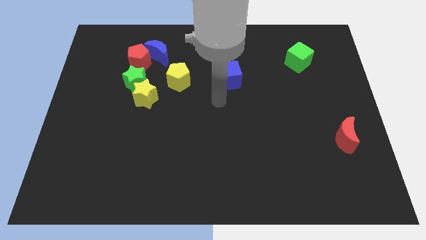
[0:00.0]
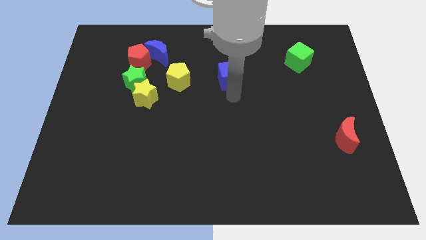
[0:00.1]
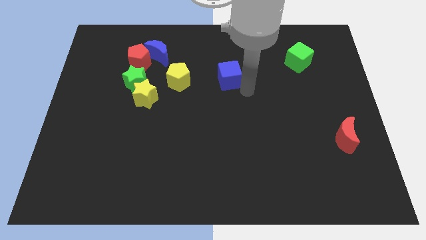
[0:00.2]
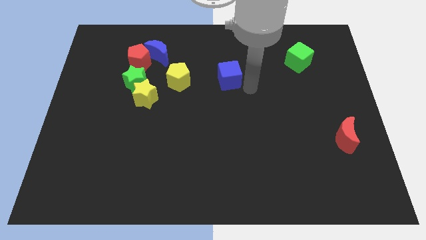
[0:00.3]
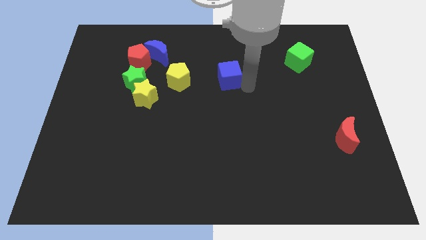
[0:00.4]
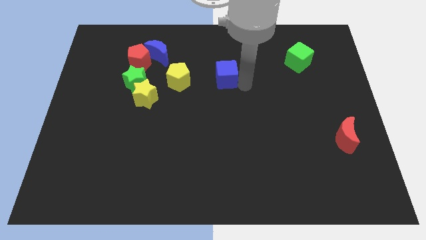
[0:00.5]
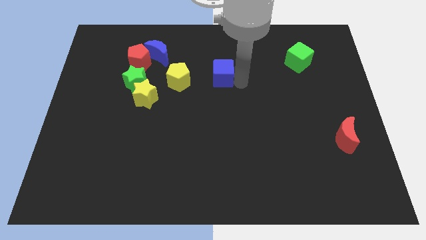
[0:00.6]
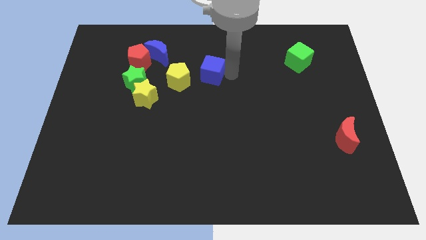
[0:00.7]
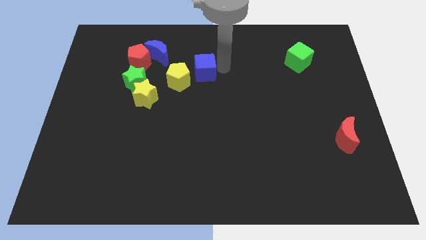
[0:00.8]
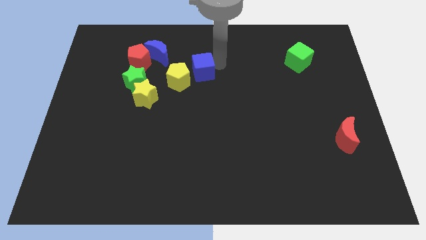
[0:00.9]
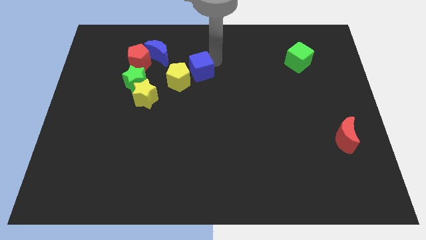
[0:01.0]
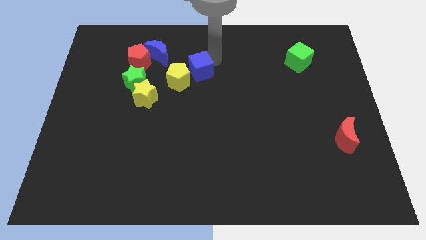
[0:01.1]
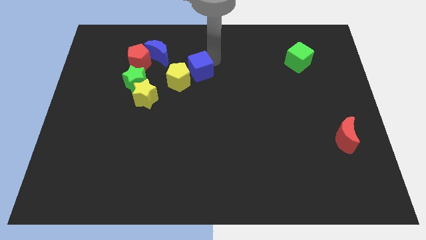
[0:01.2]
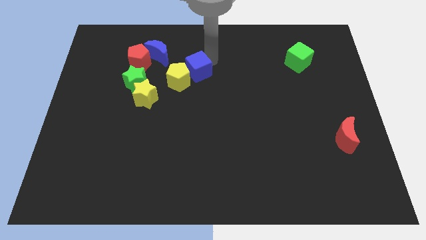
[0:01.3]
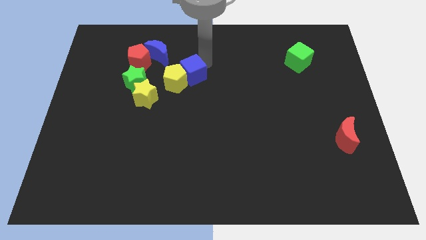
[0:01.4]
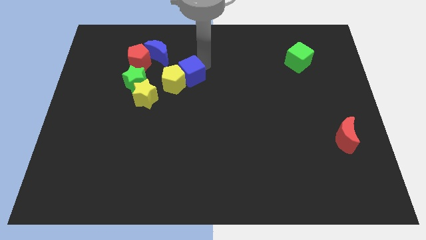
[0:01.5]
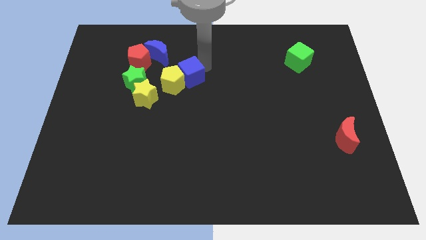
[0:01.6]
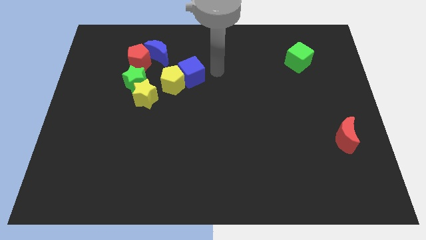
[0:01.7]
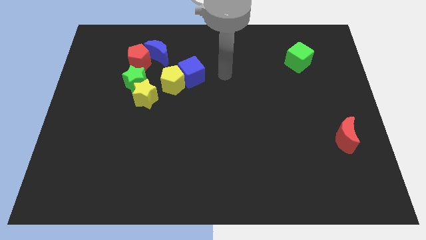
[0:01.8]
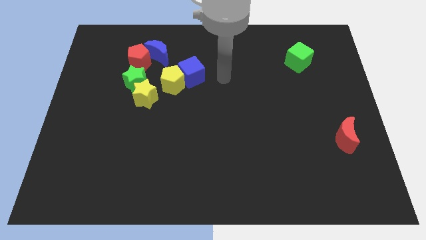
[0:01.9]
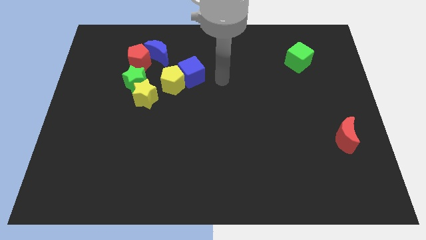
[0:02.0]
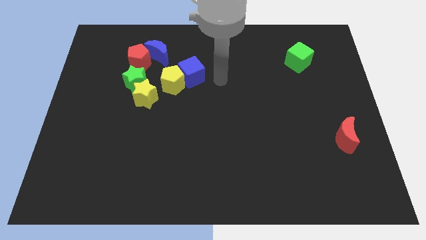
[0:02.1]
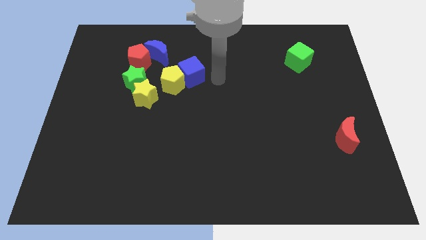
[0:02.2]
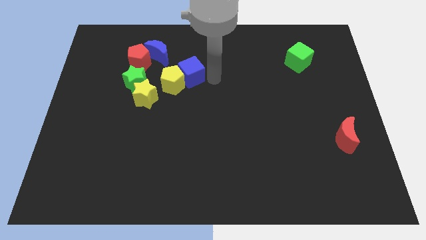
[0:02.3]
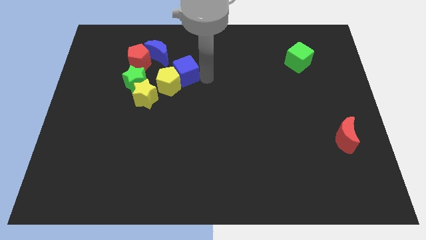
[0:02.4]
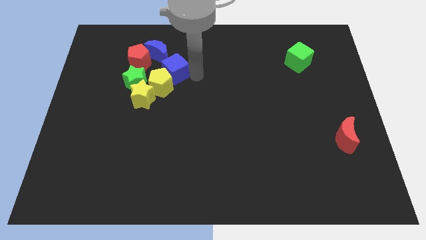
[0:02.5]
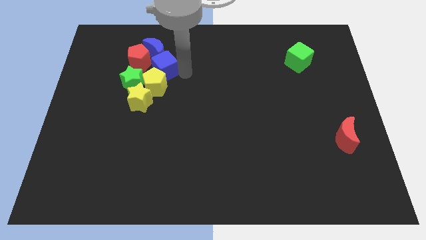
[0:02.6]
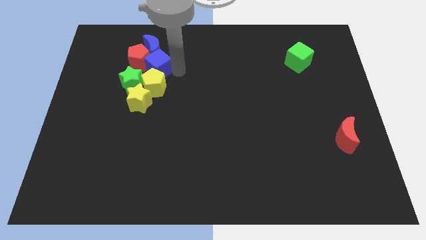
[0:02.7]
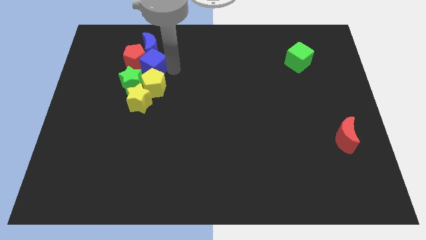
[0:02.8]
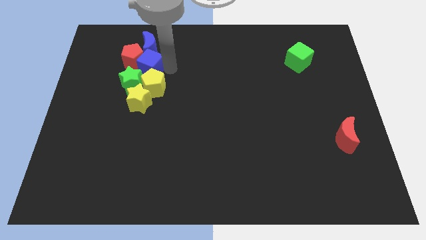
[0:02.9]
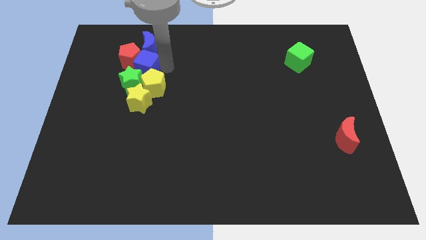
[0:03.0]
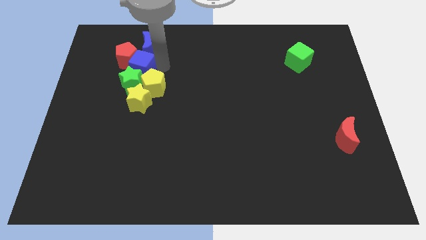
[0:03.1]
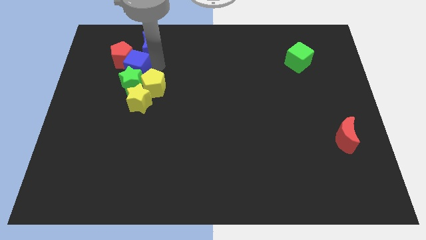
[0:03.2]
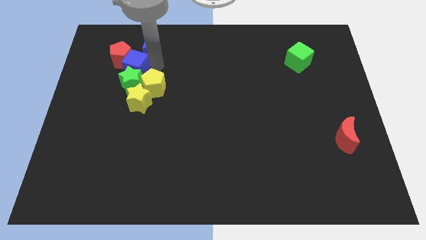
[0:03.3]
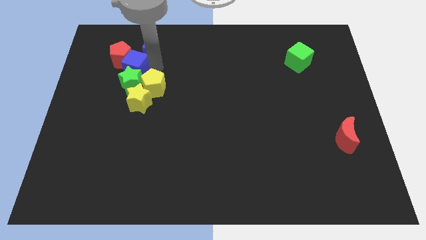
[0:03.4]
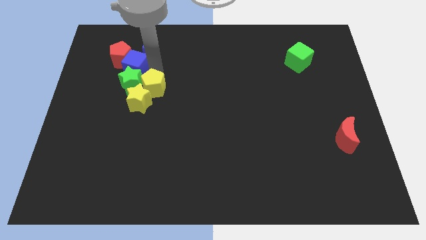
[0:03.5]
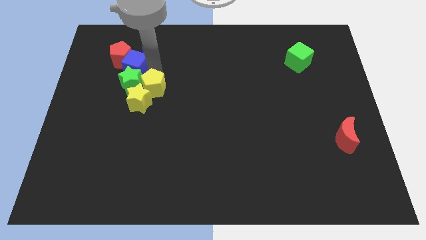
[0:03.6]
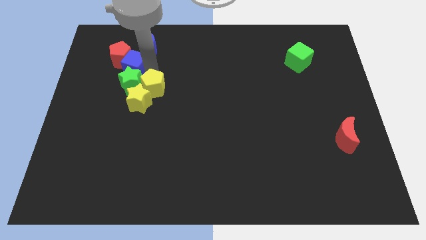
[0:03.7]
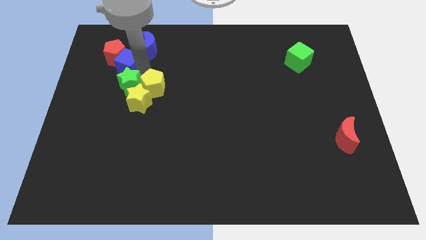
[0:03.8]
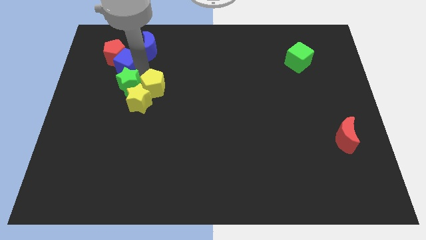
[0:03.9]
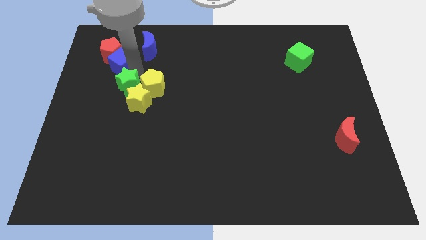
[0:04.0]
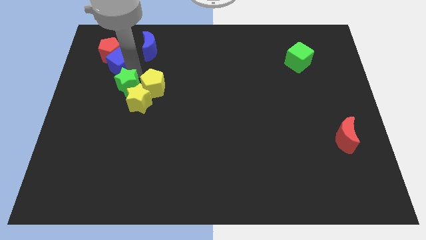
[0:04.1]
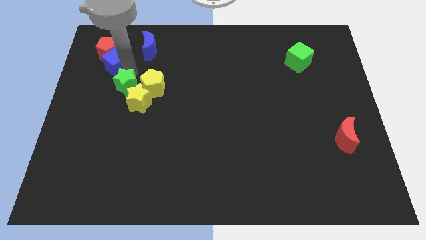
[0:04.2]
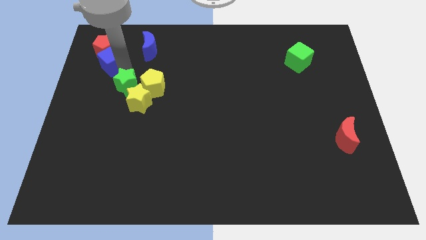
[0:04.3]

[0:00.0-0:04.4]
place the blue cube in between red pentagon and green star

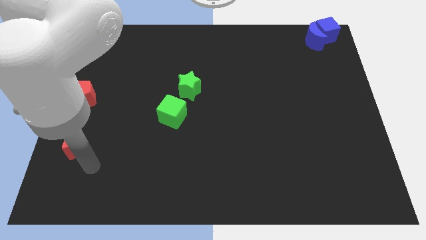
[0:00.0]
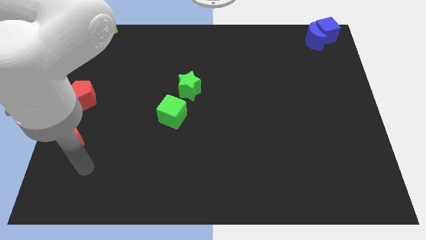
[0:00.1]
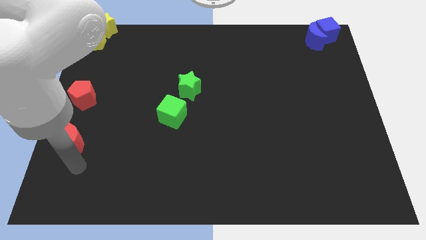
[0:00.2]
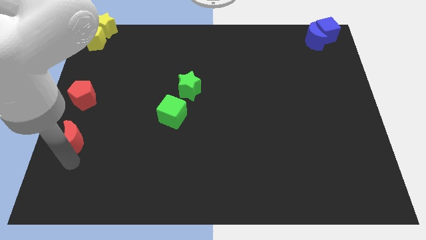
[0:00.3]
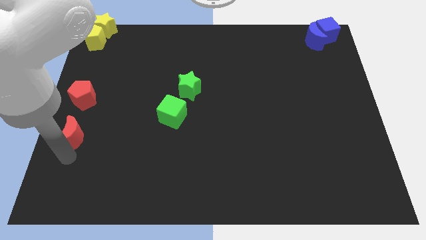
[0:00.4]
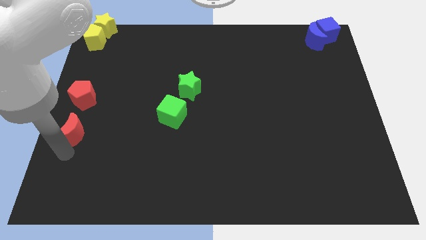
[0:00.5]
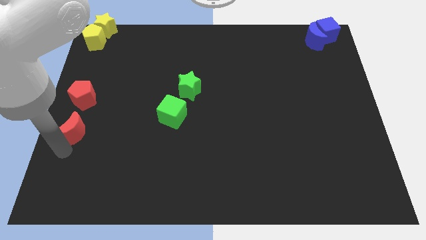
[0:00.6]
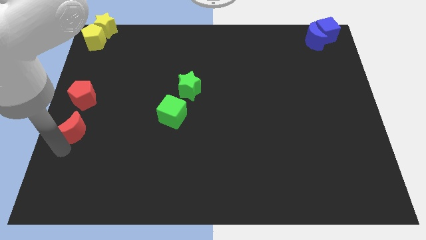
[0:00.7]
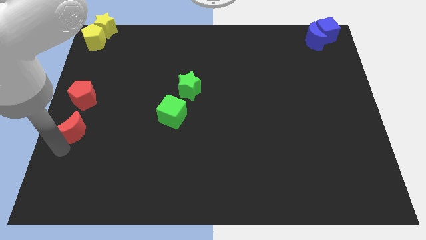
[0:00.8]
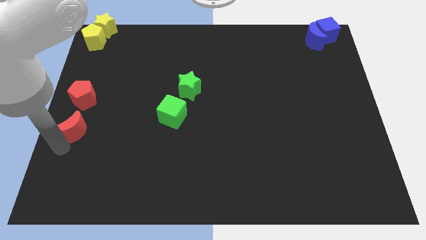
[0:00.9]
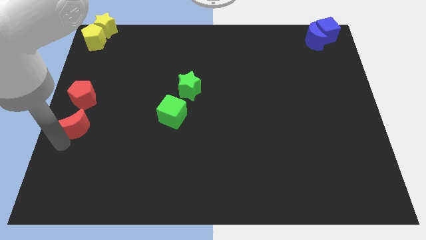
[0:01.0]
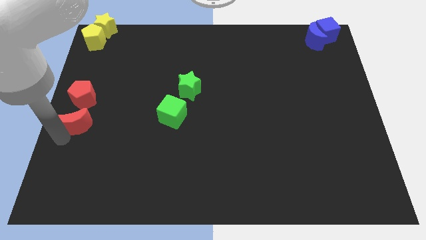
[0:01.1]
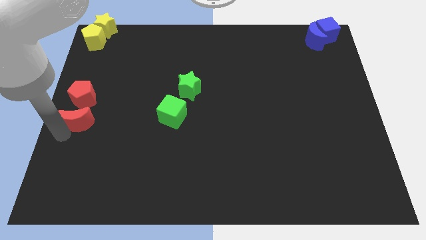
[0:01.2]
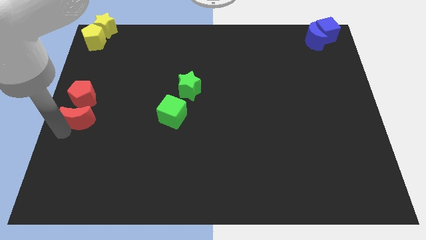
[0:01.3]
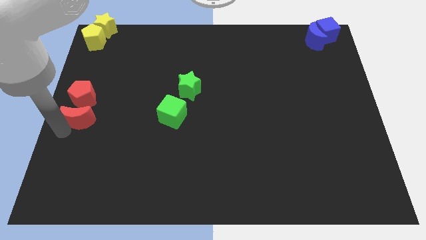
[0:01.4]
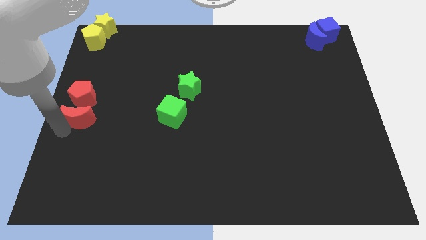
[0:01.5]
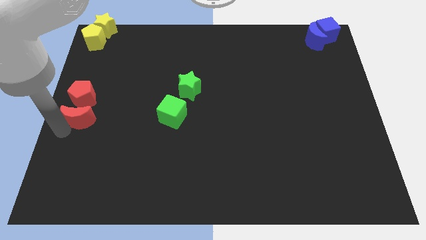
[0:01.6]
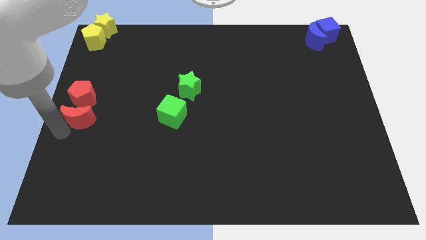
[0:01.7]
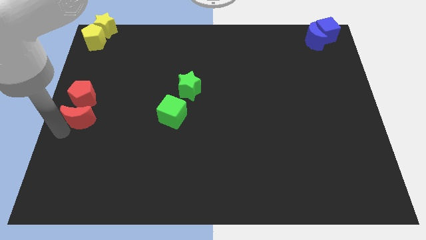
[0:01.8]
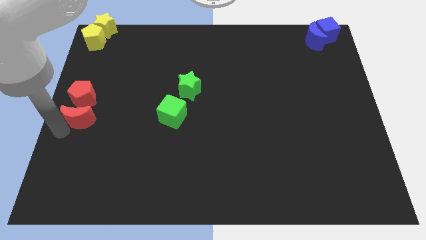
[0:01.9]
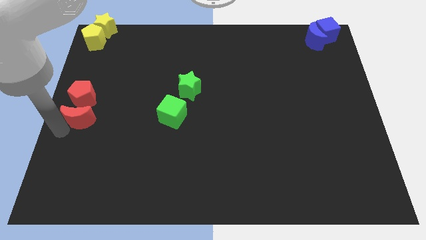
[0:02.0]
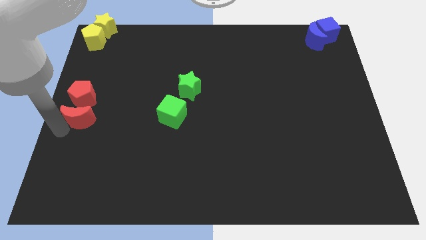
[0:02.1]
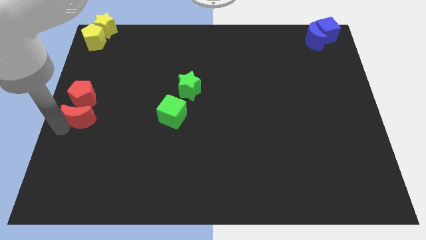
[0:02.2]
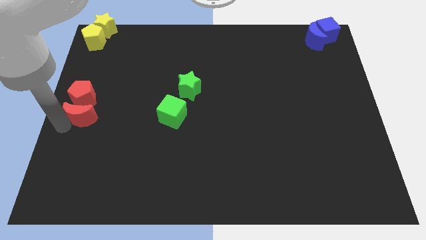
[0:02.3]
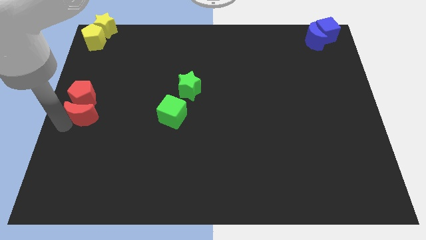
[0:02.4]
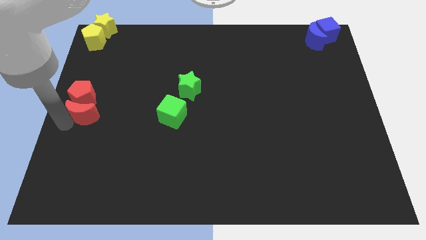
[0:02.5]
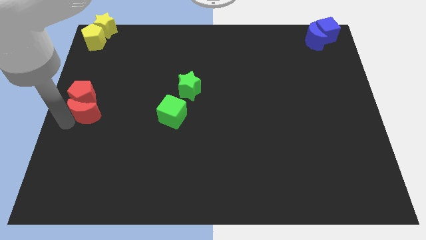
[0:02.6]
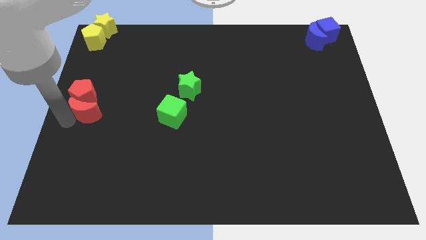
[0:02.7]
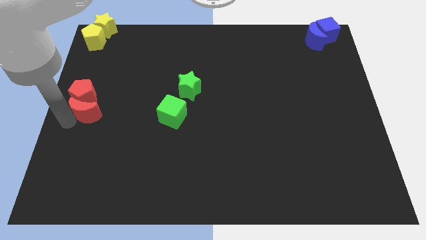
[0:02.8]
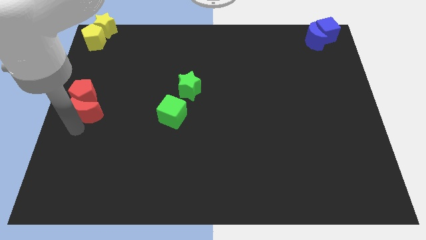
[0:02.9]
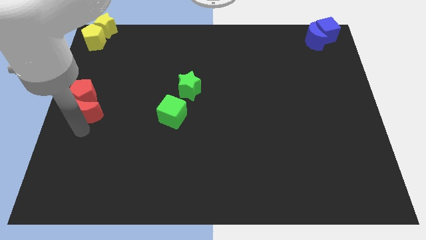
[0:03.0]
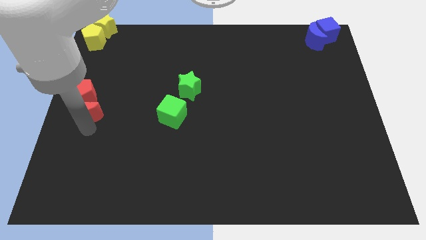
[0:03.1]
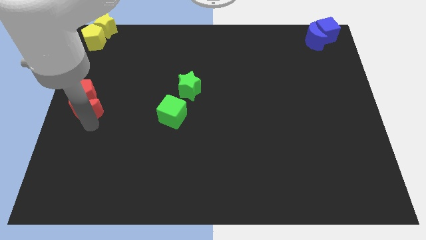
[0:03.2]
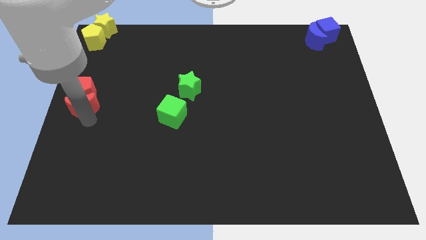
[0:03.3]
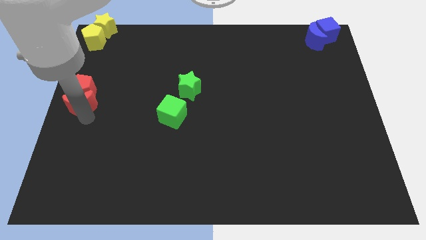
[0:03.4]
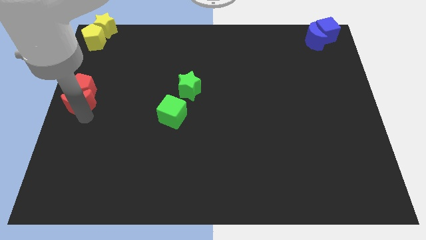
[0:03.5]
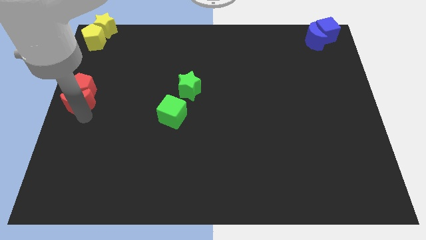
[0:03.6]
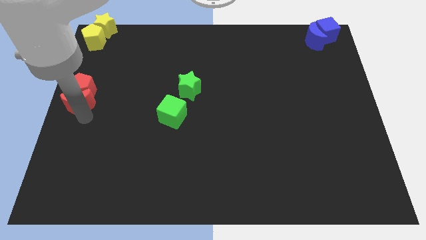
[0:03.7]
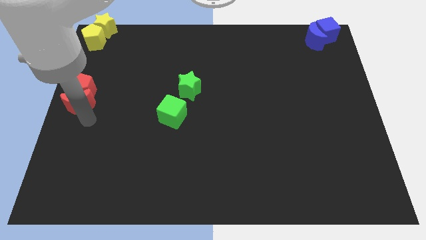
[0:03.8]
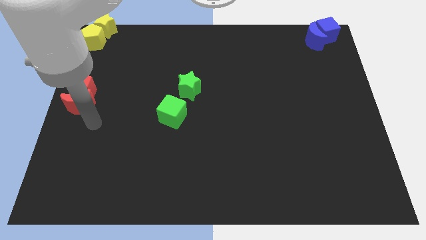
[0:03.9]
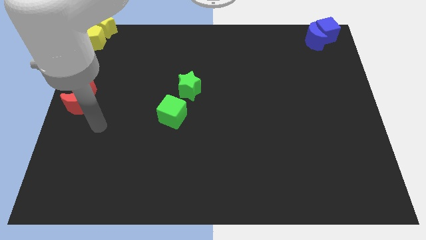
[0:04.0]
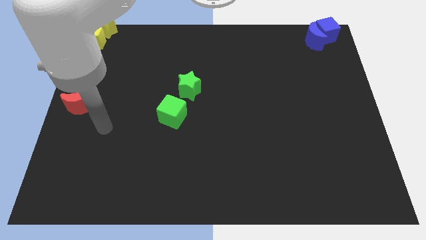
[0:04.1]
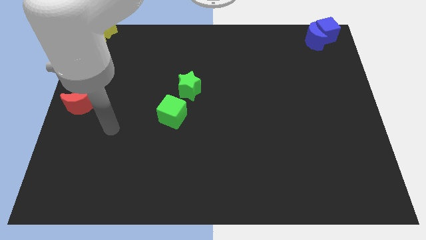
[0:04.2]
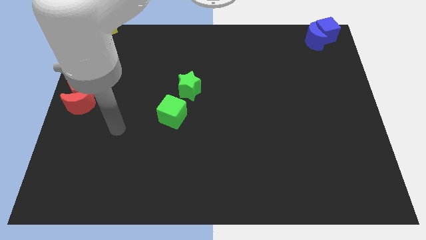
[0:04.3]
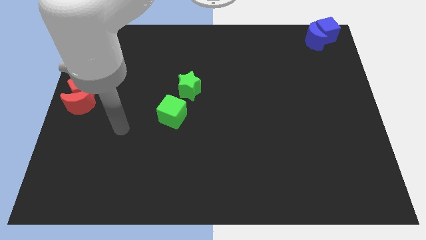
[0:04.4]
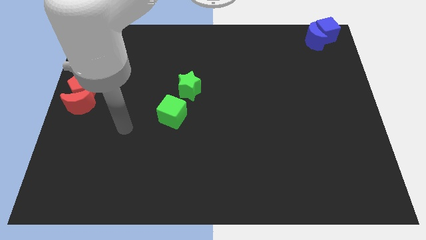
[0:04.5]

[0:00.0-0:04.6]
move the red crescent into the bottom of red pentagon
